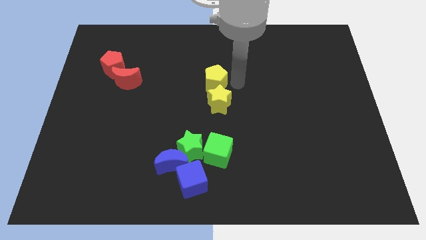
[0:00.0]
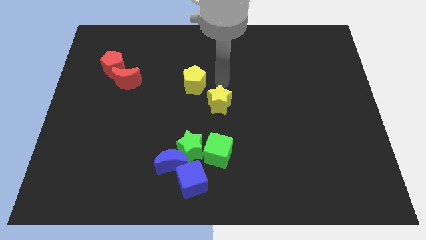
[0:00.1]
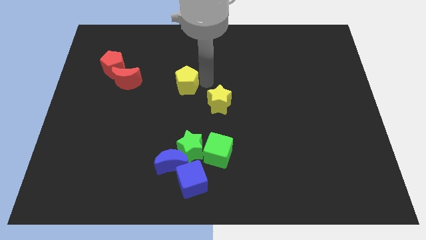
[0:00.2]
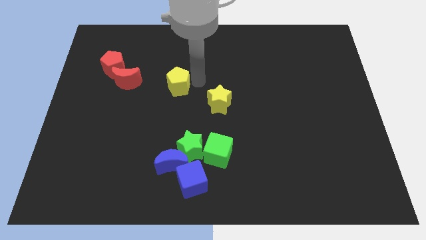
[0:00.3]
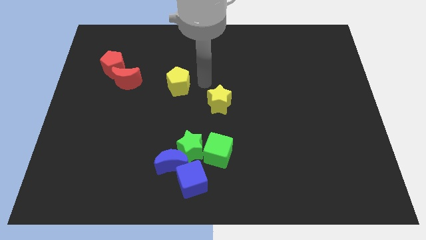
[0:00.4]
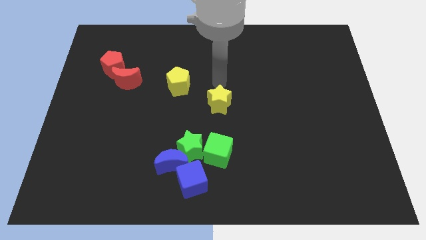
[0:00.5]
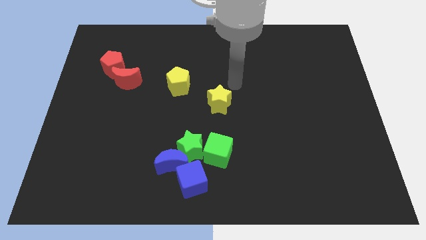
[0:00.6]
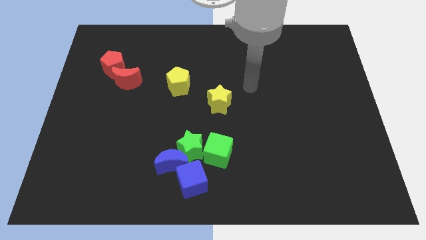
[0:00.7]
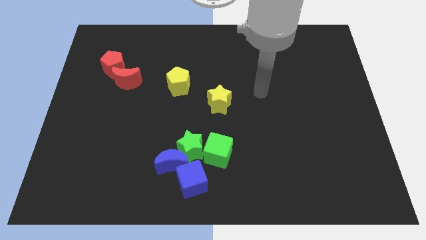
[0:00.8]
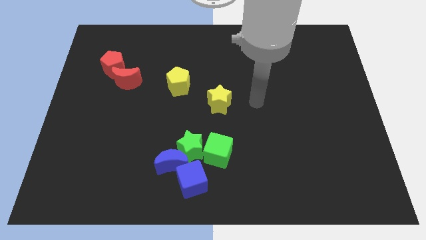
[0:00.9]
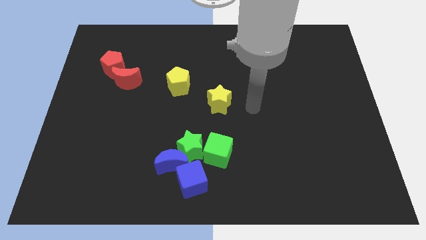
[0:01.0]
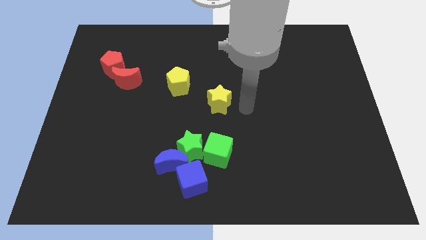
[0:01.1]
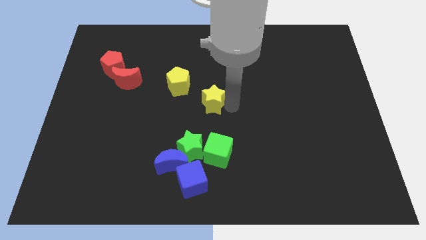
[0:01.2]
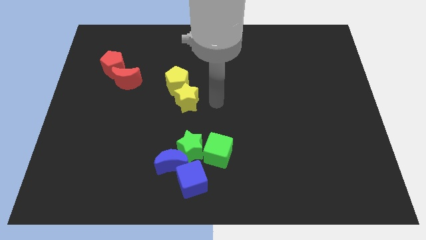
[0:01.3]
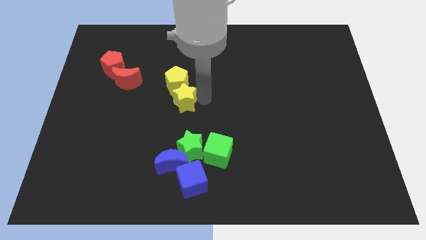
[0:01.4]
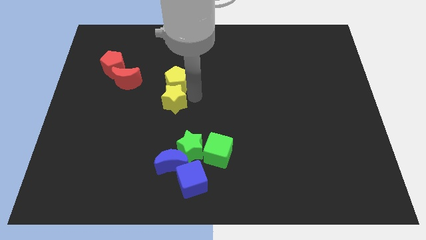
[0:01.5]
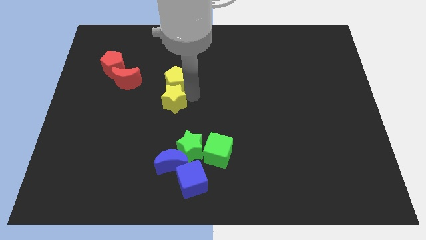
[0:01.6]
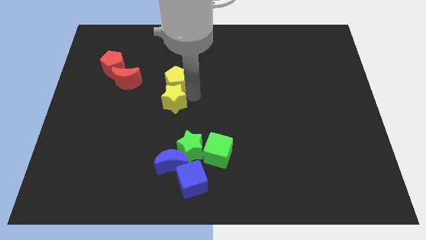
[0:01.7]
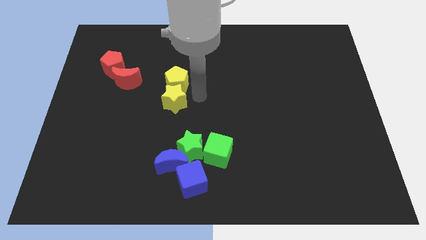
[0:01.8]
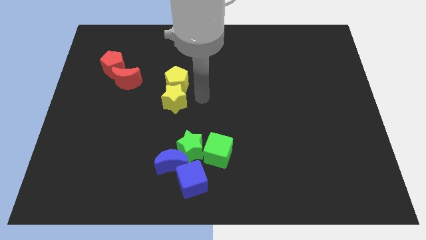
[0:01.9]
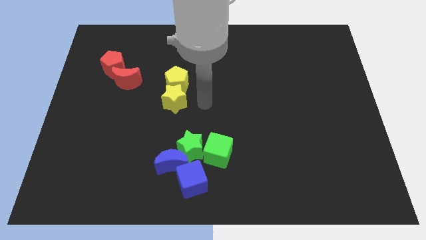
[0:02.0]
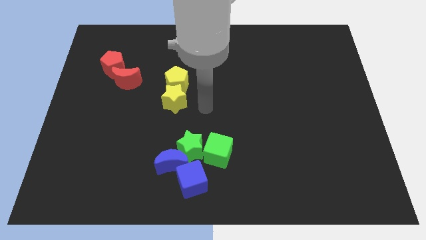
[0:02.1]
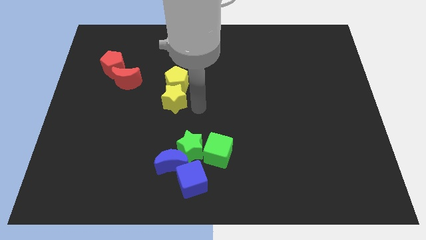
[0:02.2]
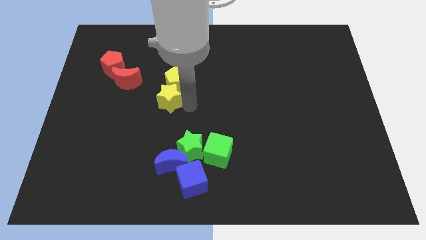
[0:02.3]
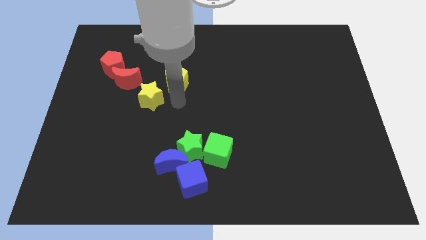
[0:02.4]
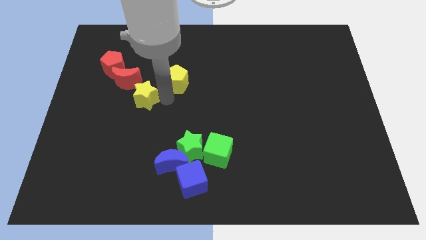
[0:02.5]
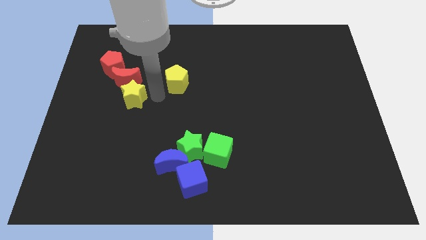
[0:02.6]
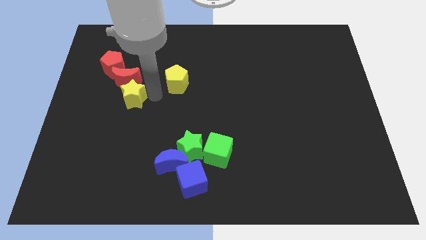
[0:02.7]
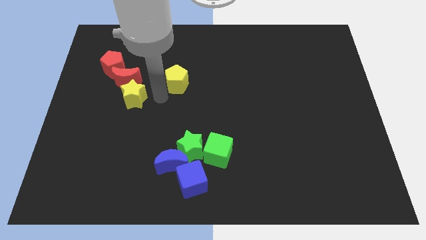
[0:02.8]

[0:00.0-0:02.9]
place the yellow star down to the red moon

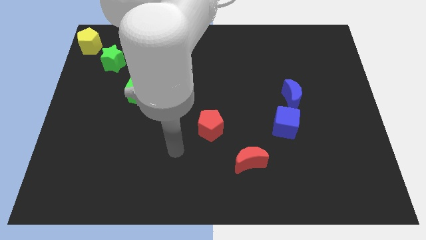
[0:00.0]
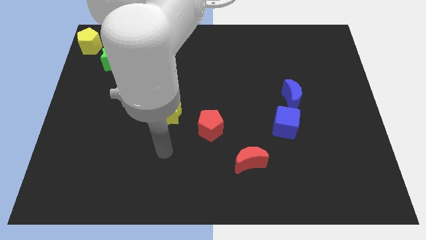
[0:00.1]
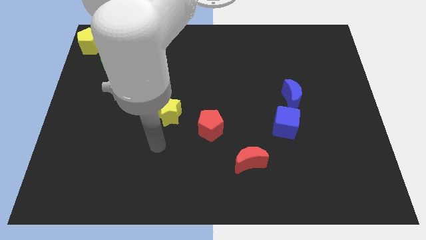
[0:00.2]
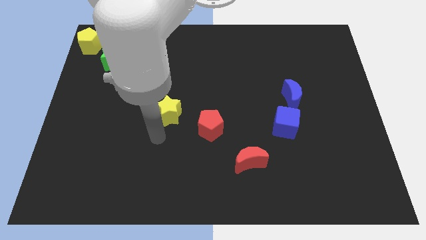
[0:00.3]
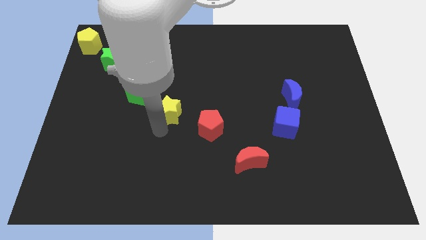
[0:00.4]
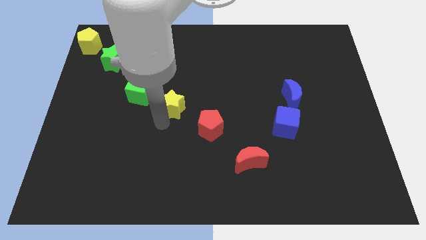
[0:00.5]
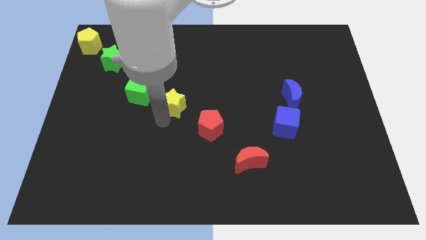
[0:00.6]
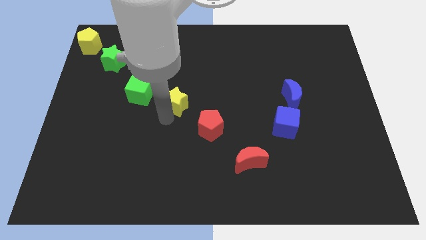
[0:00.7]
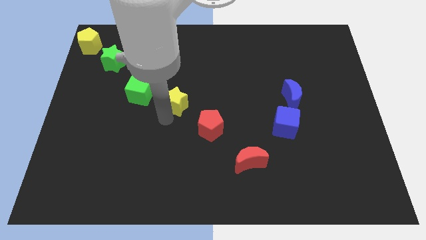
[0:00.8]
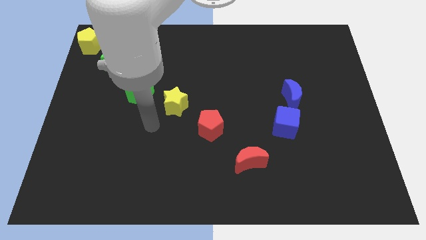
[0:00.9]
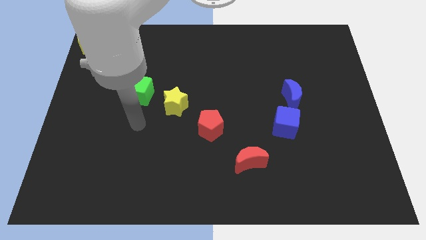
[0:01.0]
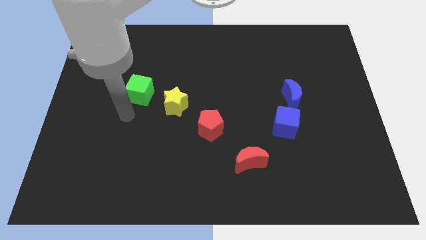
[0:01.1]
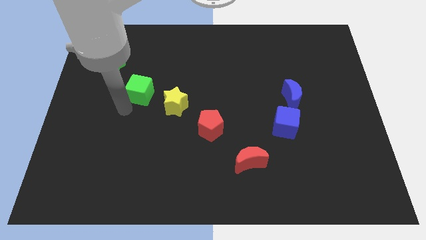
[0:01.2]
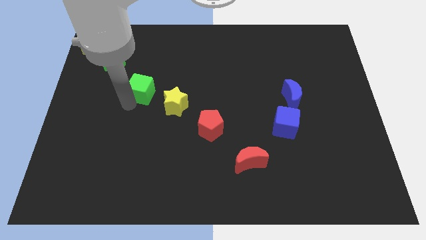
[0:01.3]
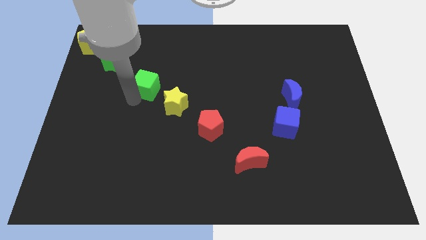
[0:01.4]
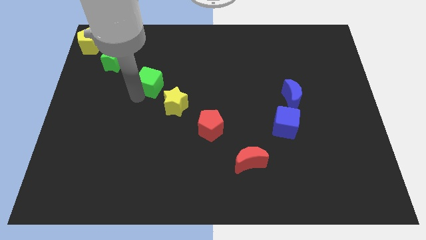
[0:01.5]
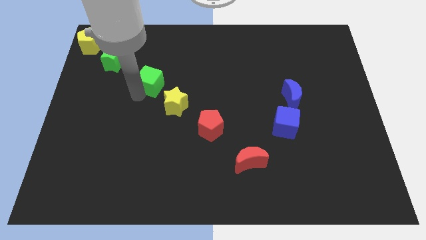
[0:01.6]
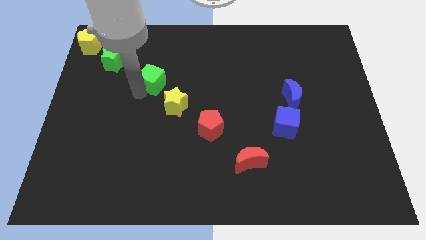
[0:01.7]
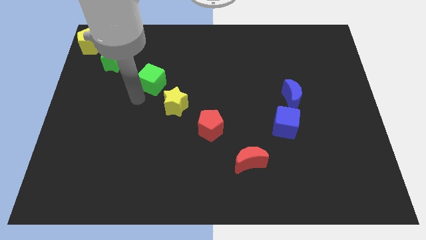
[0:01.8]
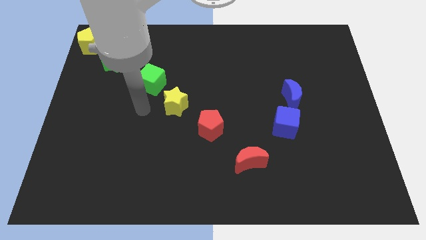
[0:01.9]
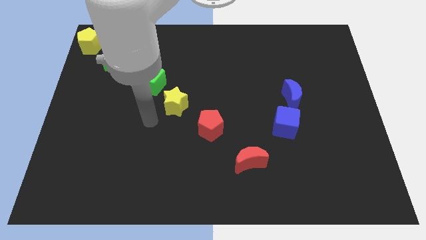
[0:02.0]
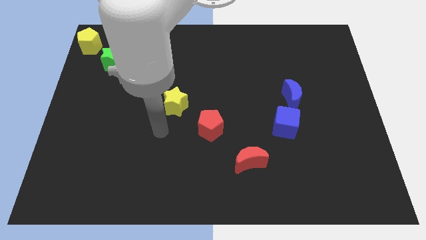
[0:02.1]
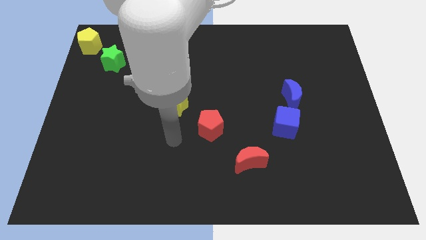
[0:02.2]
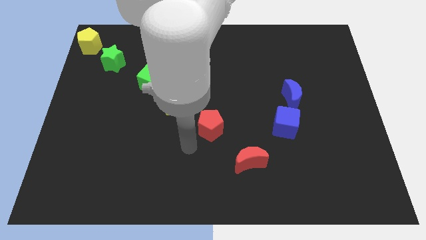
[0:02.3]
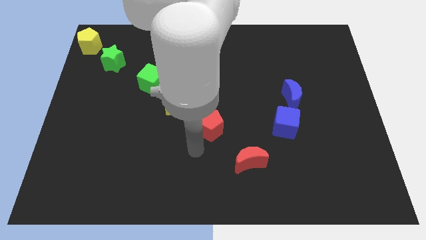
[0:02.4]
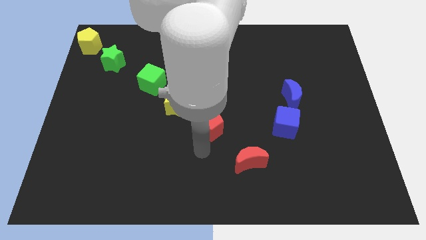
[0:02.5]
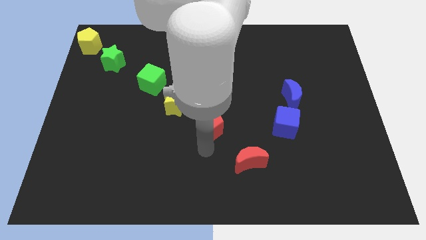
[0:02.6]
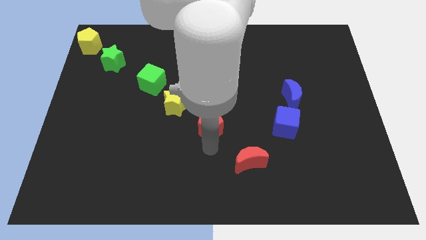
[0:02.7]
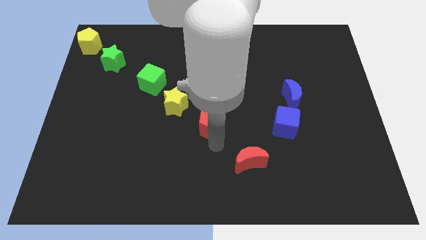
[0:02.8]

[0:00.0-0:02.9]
slightly push the yellow star and green cube diagonal to each other

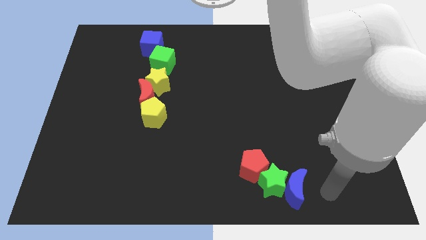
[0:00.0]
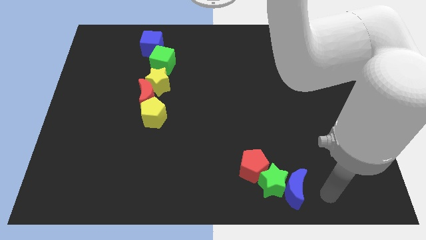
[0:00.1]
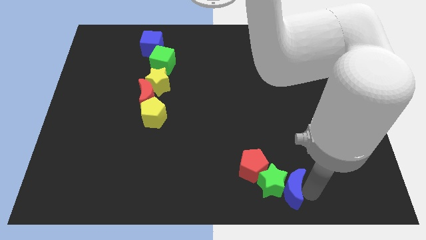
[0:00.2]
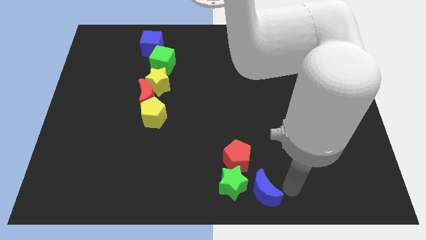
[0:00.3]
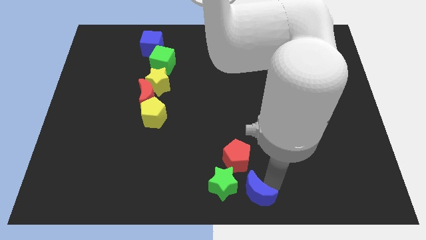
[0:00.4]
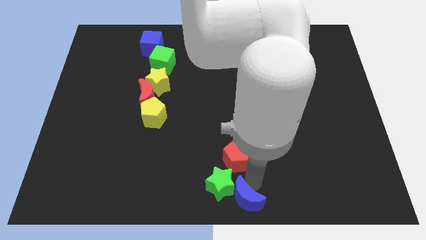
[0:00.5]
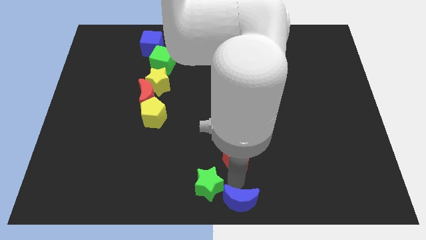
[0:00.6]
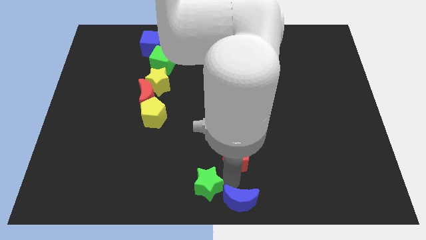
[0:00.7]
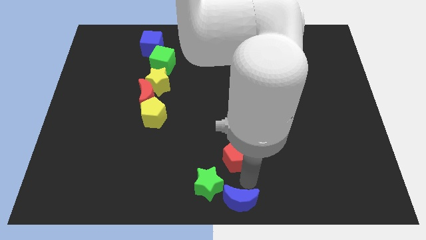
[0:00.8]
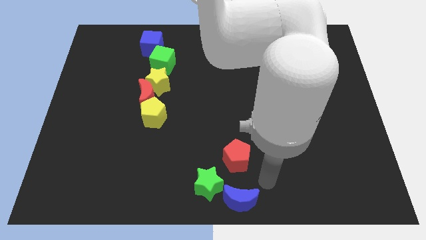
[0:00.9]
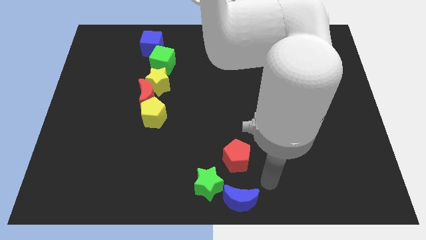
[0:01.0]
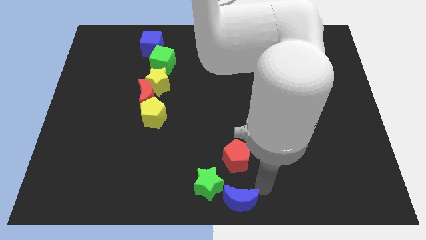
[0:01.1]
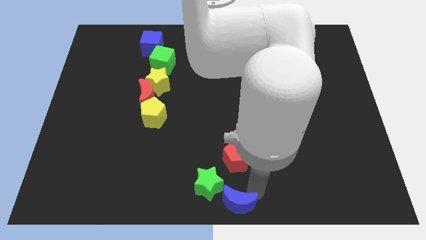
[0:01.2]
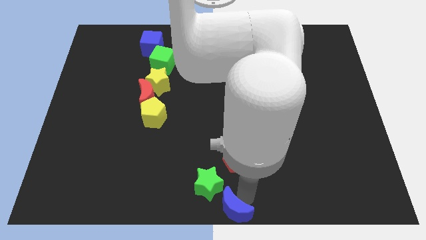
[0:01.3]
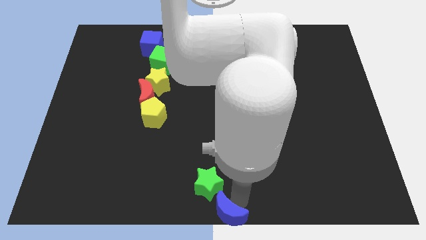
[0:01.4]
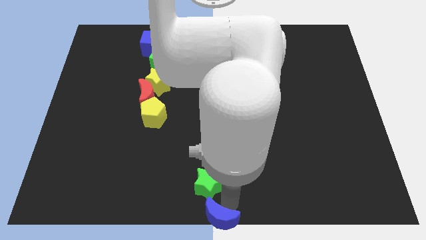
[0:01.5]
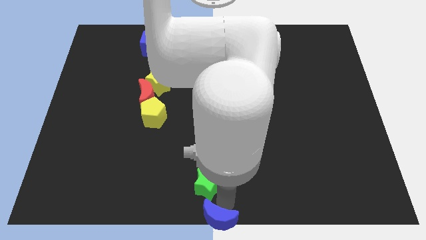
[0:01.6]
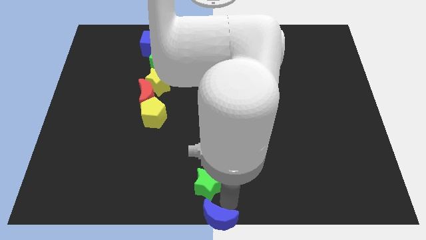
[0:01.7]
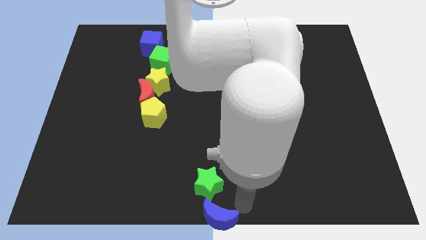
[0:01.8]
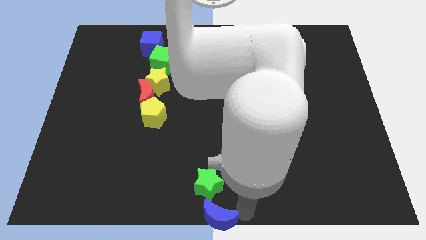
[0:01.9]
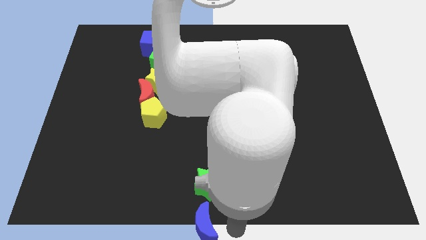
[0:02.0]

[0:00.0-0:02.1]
push the red moon to the bottom center of the board

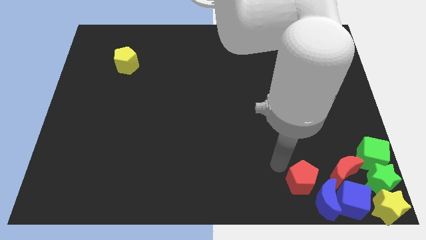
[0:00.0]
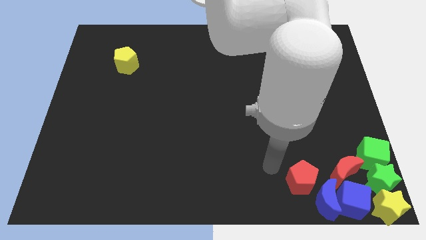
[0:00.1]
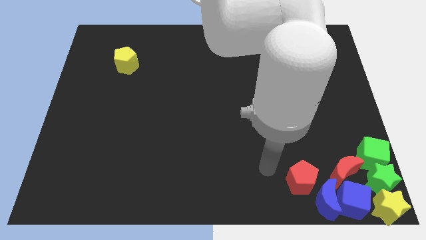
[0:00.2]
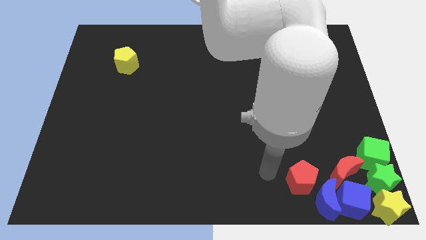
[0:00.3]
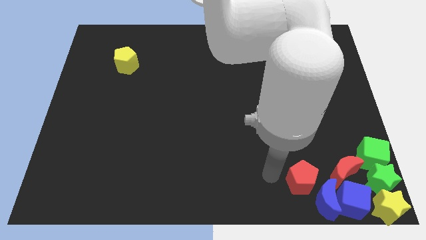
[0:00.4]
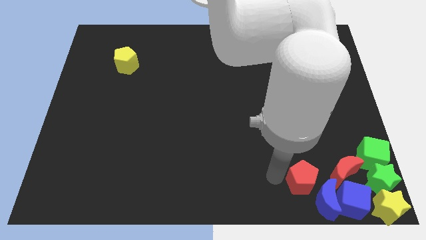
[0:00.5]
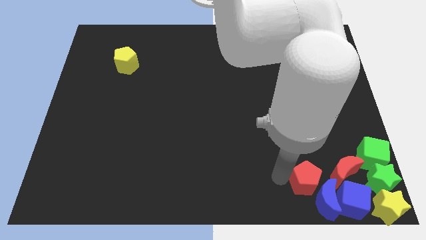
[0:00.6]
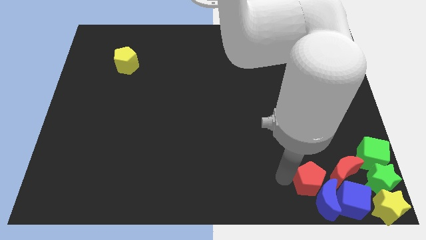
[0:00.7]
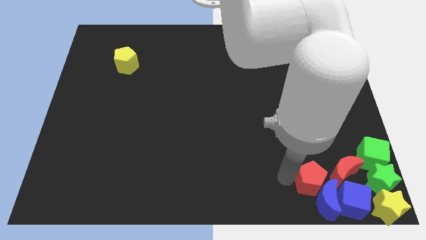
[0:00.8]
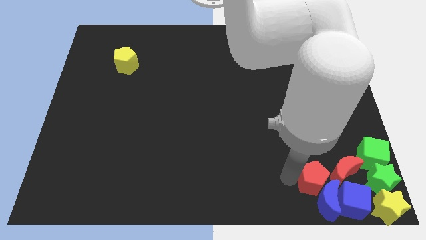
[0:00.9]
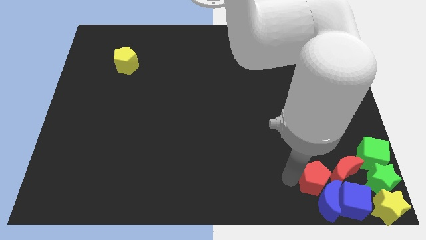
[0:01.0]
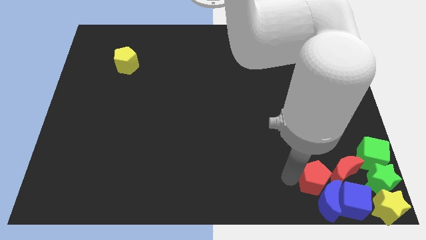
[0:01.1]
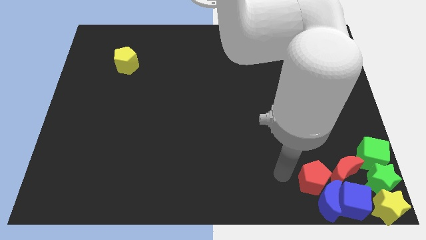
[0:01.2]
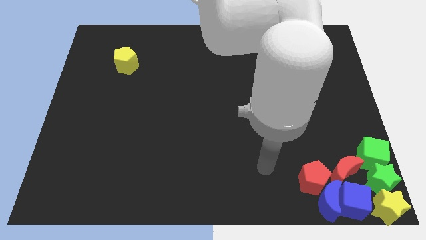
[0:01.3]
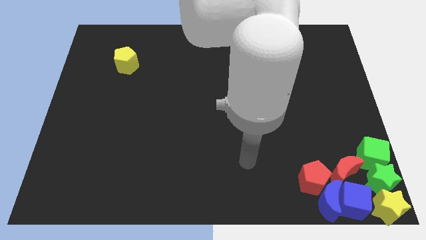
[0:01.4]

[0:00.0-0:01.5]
push the red pentagon top left of the blue crescent
